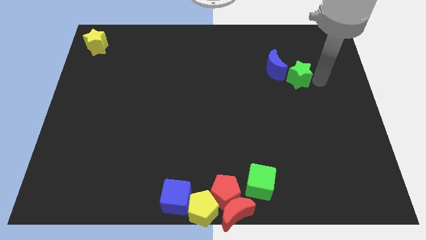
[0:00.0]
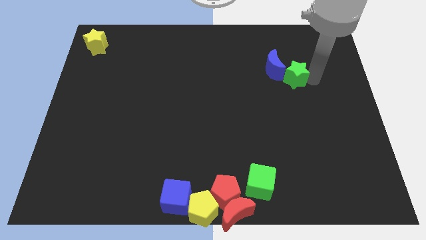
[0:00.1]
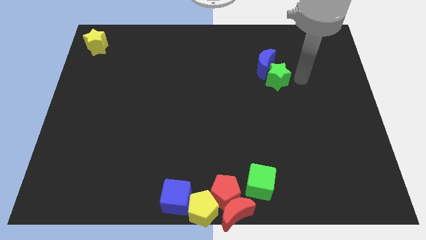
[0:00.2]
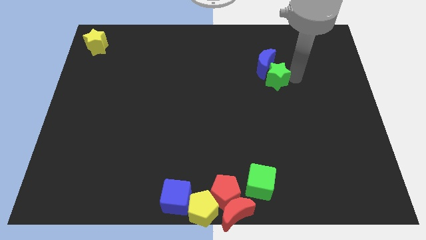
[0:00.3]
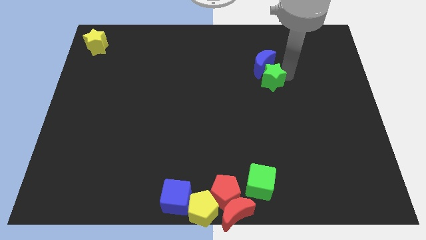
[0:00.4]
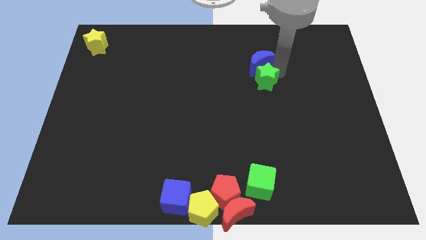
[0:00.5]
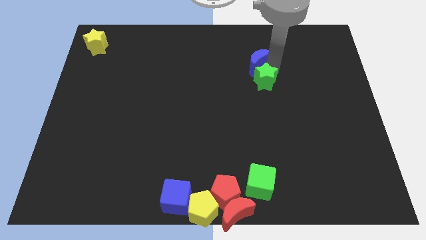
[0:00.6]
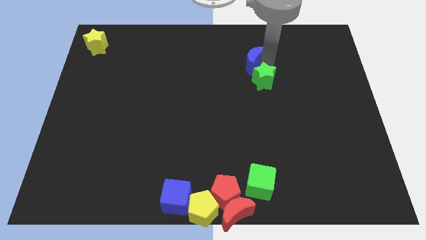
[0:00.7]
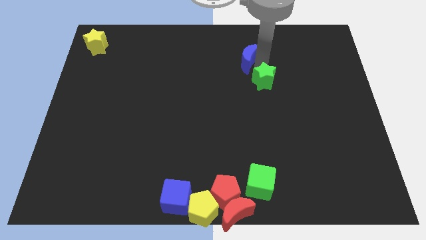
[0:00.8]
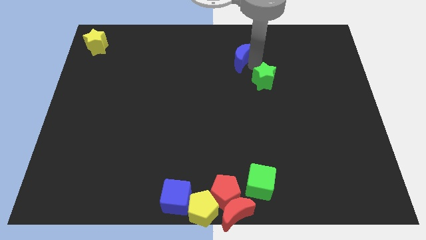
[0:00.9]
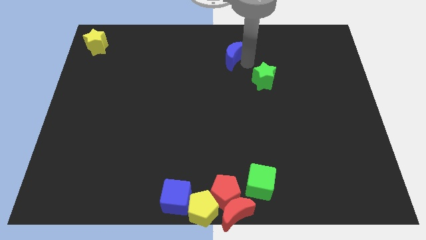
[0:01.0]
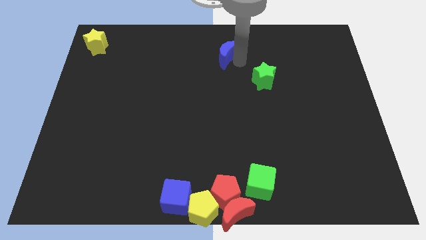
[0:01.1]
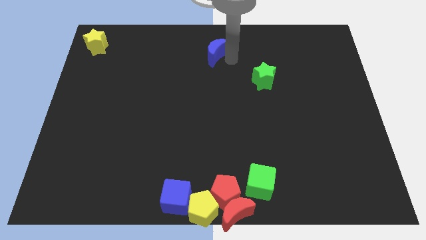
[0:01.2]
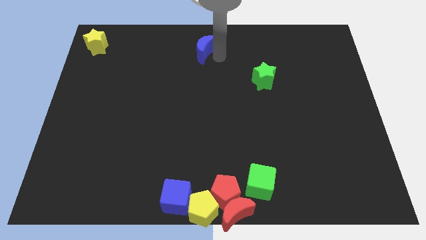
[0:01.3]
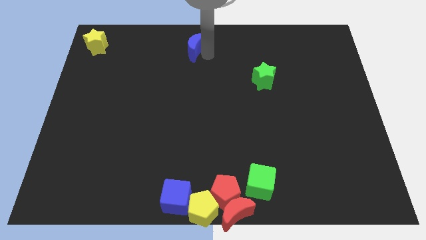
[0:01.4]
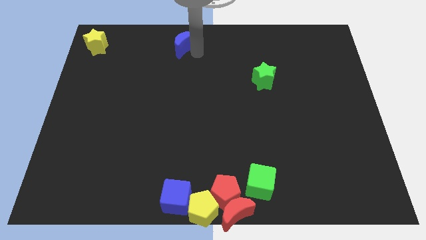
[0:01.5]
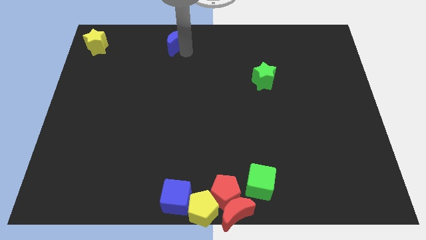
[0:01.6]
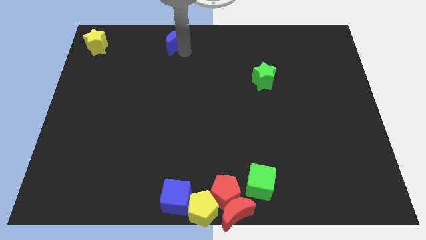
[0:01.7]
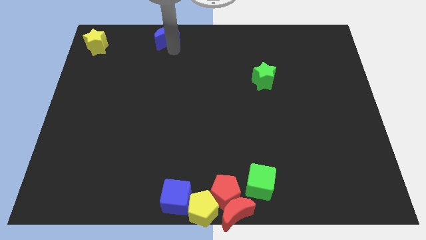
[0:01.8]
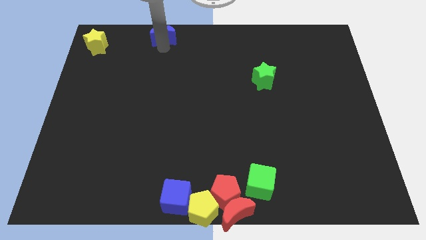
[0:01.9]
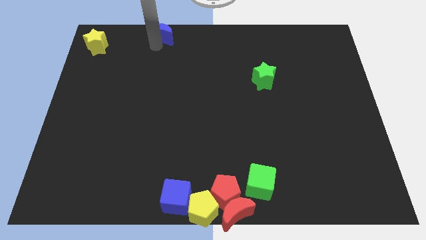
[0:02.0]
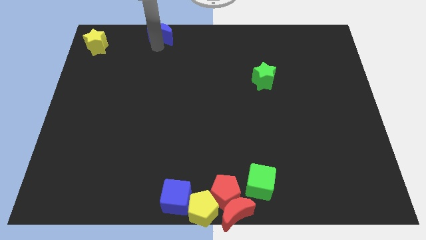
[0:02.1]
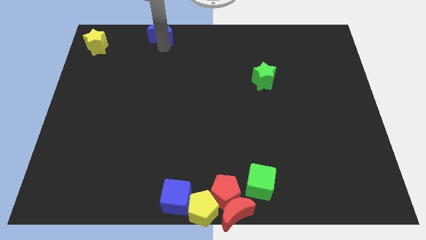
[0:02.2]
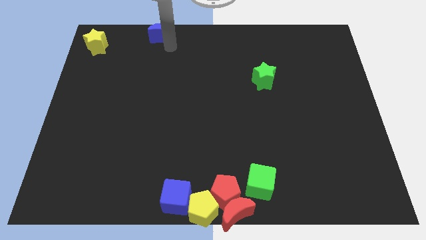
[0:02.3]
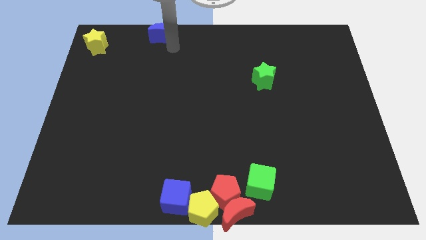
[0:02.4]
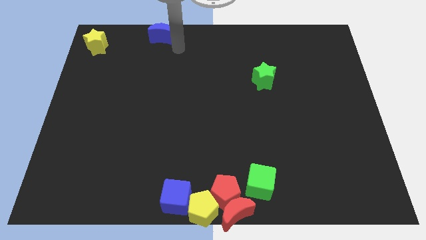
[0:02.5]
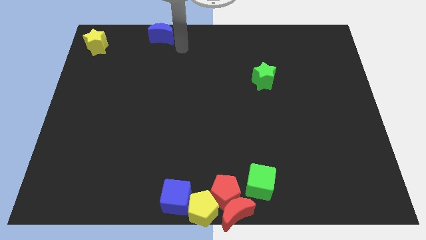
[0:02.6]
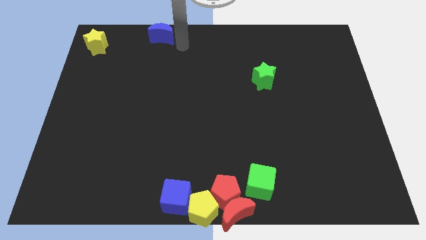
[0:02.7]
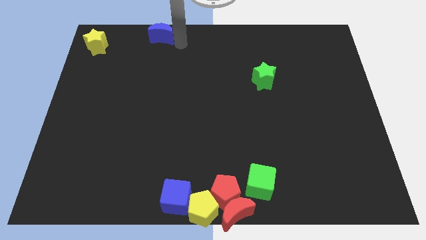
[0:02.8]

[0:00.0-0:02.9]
place the blue moon right to the yellow star

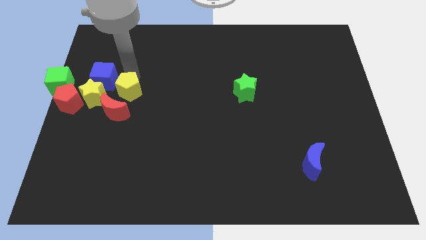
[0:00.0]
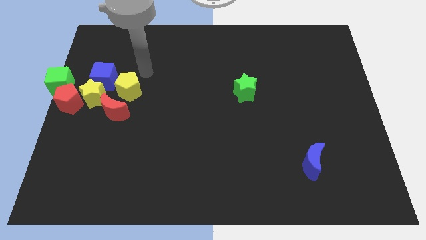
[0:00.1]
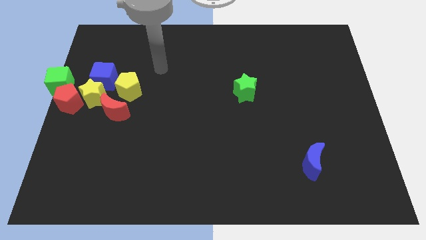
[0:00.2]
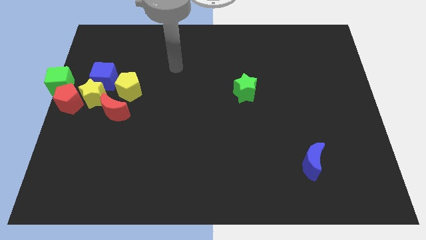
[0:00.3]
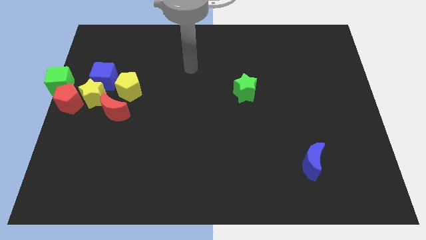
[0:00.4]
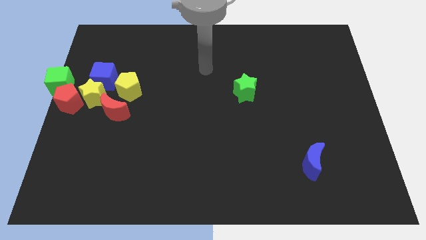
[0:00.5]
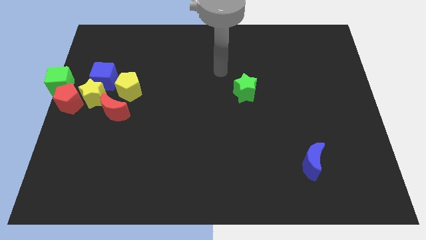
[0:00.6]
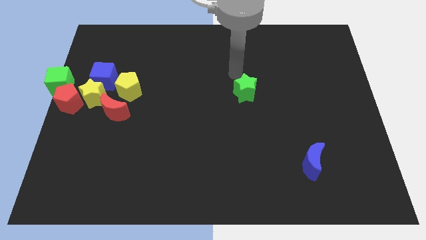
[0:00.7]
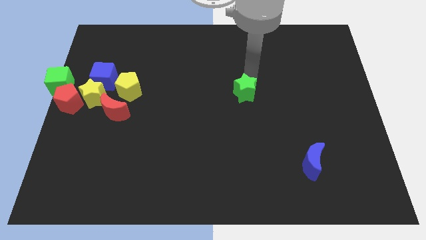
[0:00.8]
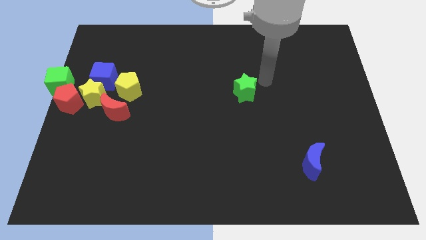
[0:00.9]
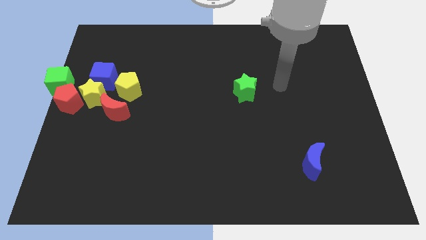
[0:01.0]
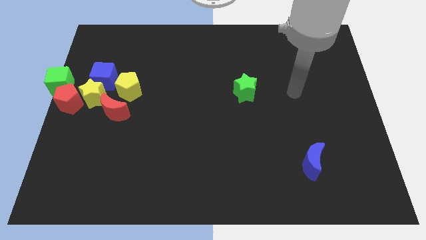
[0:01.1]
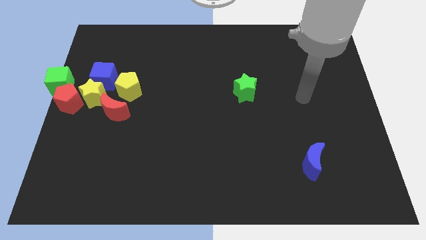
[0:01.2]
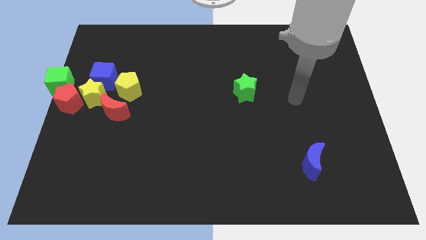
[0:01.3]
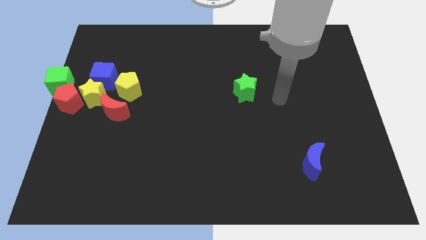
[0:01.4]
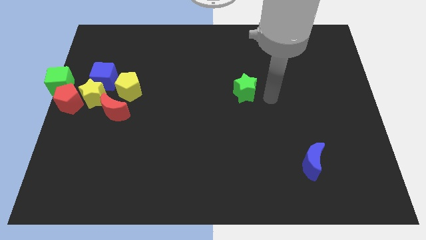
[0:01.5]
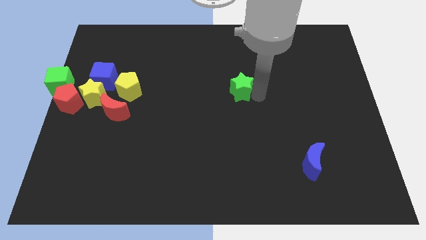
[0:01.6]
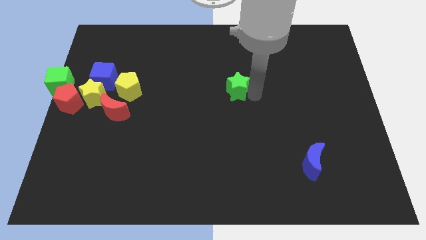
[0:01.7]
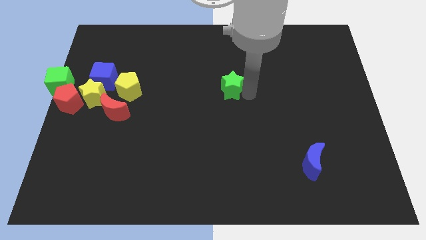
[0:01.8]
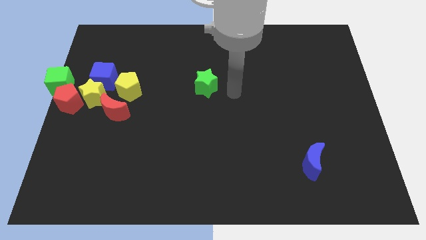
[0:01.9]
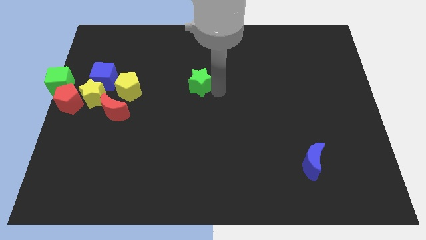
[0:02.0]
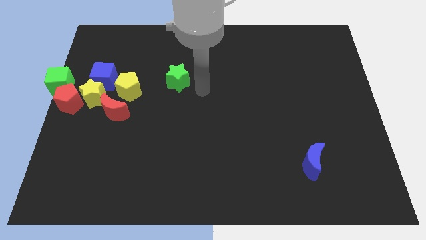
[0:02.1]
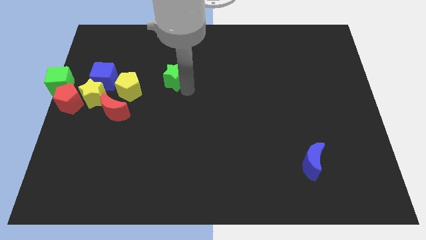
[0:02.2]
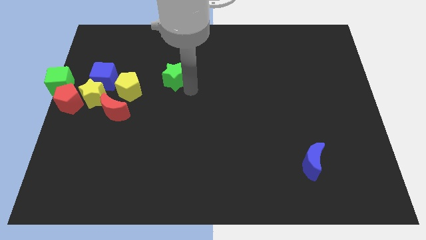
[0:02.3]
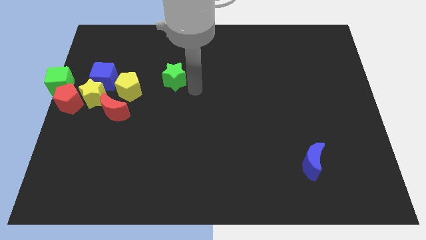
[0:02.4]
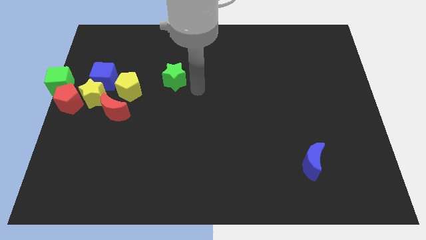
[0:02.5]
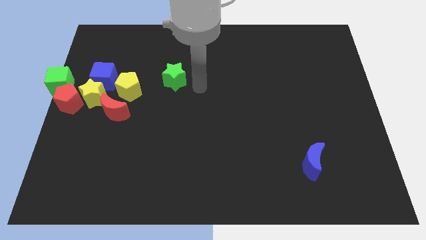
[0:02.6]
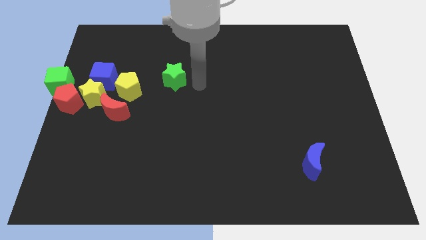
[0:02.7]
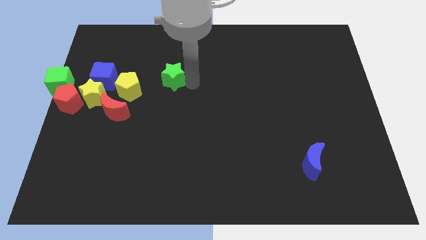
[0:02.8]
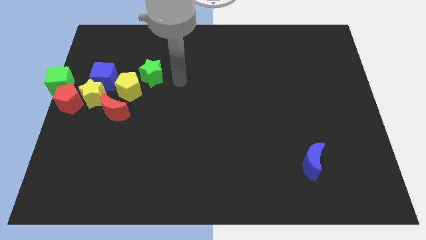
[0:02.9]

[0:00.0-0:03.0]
place the green star to the top right of the yellow pentagon

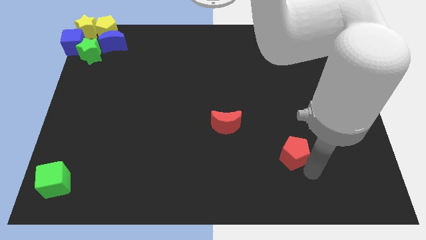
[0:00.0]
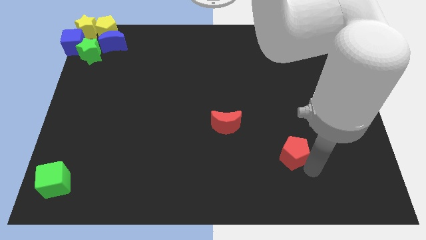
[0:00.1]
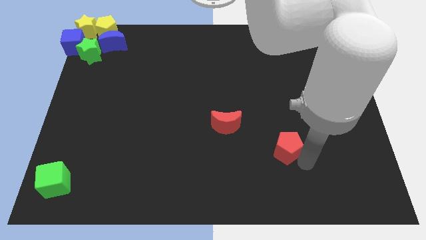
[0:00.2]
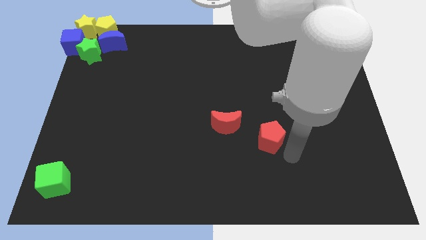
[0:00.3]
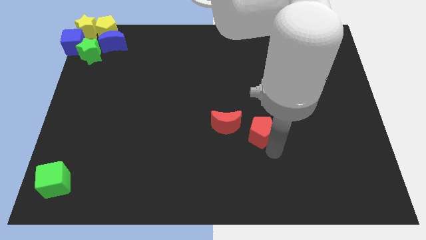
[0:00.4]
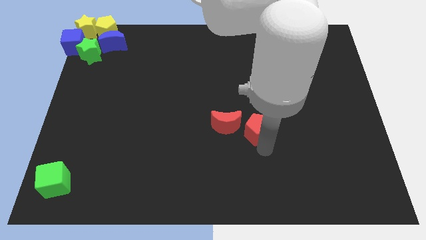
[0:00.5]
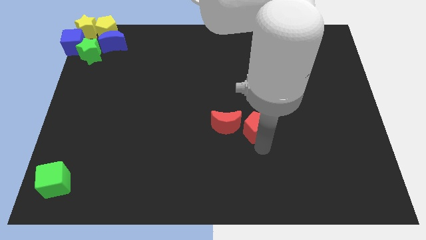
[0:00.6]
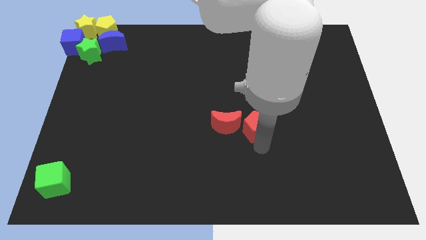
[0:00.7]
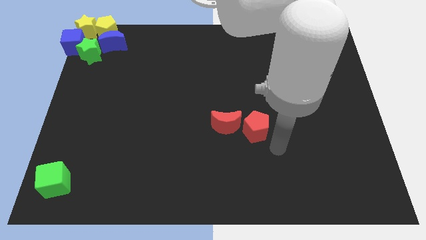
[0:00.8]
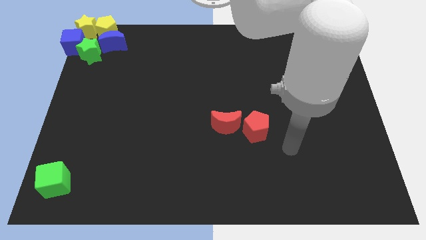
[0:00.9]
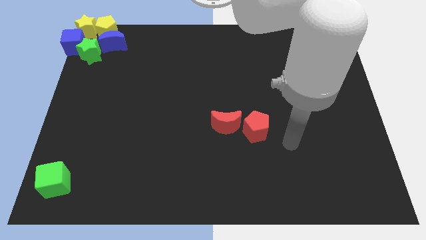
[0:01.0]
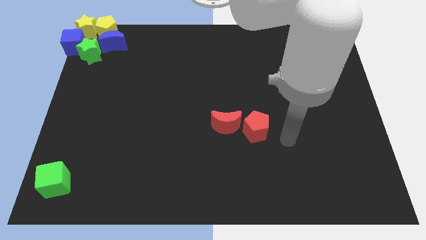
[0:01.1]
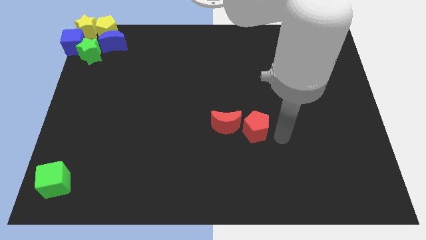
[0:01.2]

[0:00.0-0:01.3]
push the red pentagon to the right of red crescent

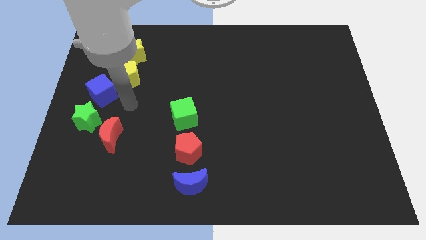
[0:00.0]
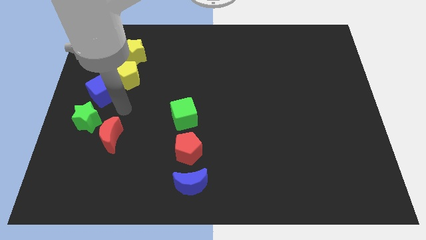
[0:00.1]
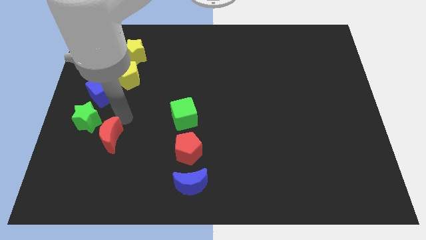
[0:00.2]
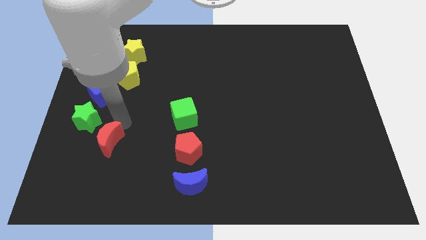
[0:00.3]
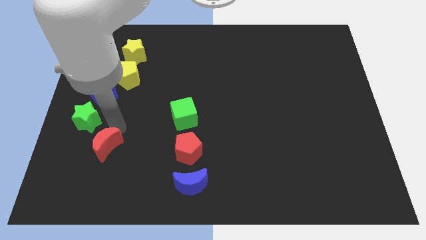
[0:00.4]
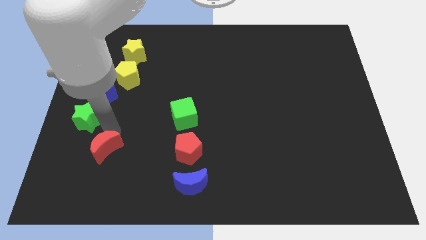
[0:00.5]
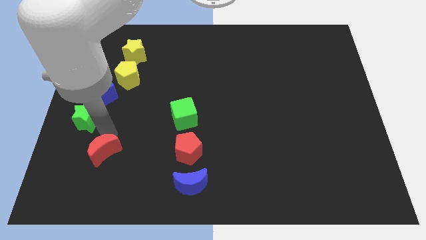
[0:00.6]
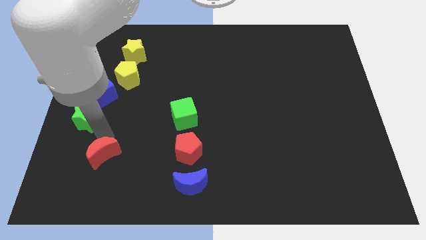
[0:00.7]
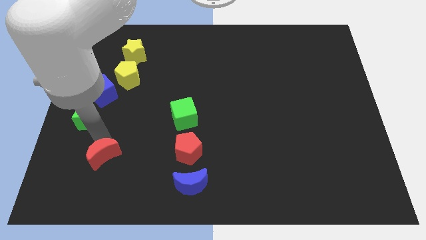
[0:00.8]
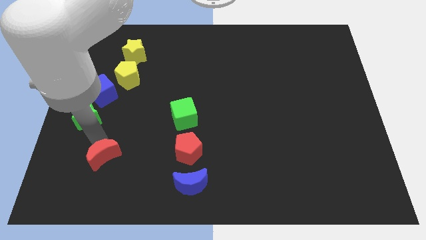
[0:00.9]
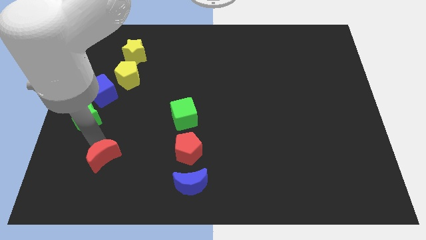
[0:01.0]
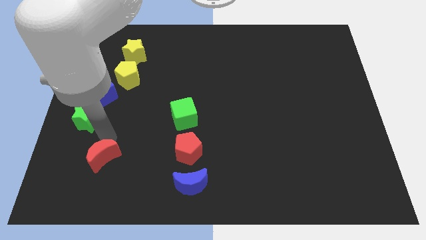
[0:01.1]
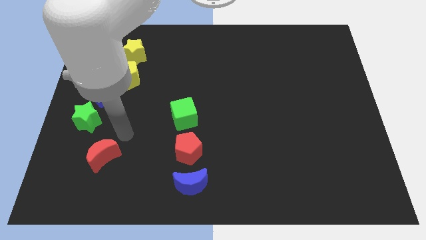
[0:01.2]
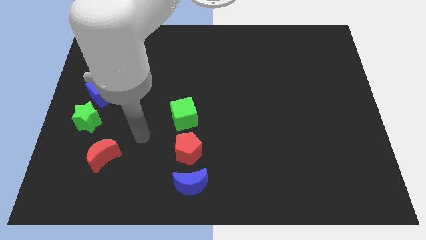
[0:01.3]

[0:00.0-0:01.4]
drag the red moon slightly downwards

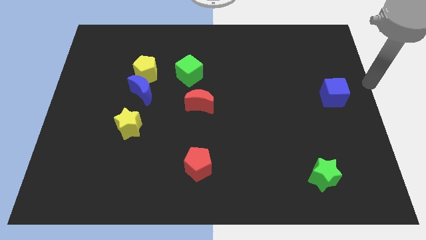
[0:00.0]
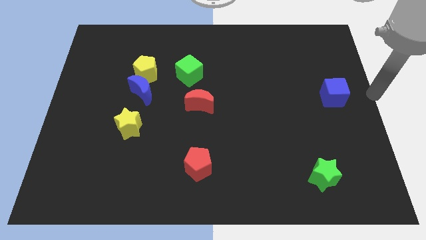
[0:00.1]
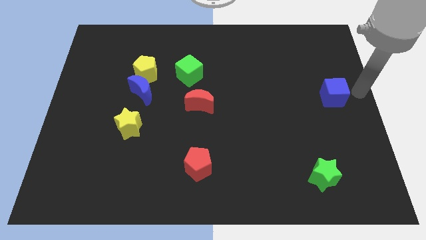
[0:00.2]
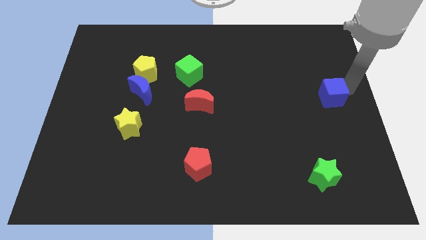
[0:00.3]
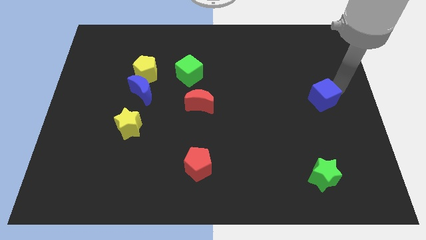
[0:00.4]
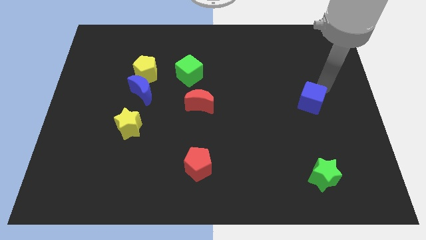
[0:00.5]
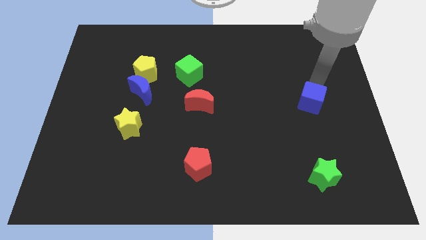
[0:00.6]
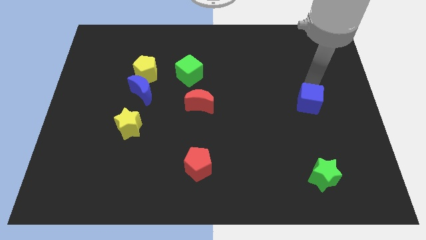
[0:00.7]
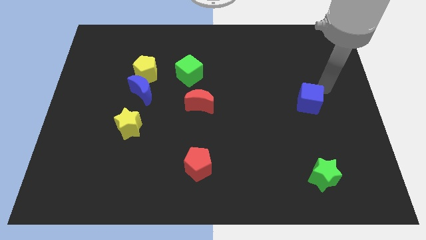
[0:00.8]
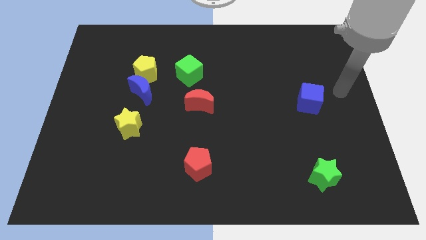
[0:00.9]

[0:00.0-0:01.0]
put the blue cube baove the green star
